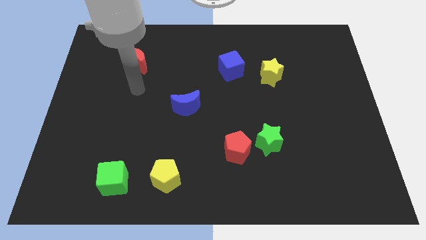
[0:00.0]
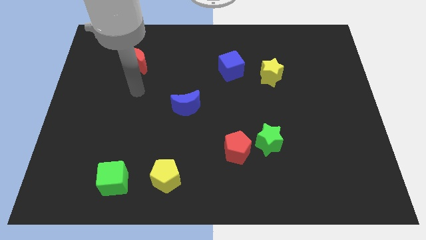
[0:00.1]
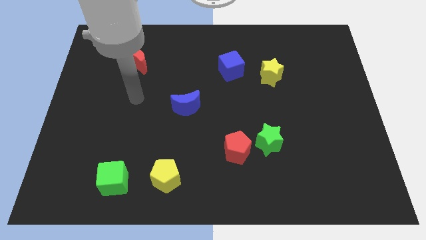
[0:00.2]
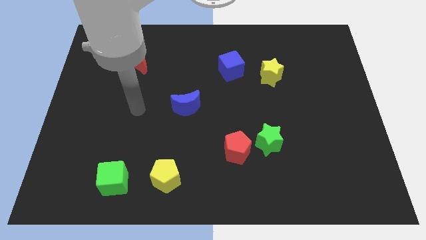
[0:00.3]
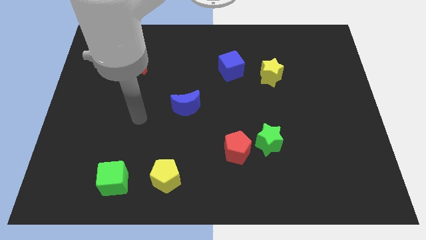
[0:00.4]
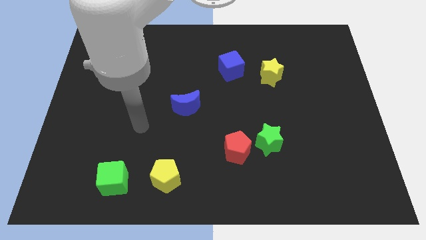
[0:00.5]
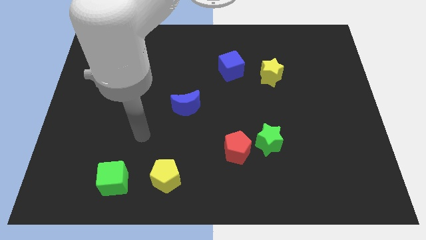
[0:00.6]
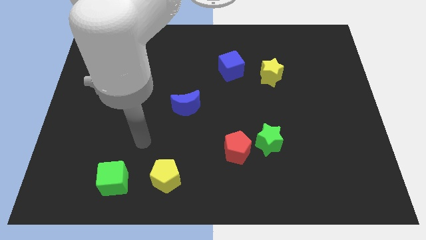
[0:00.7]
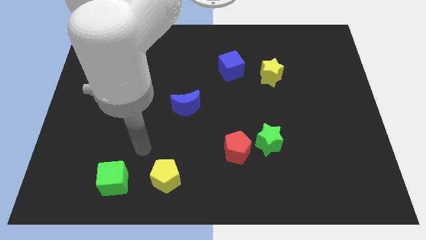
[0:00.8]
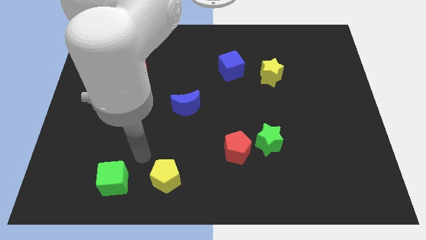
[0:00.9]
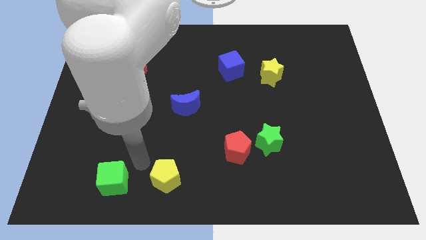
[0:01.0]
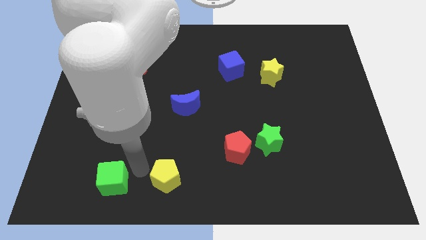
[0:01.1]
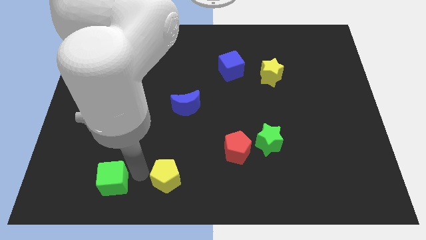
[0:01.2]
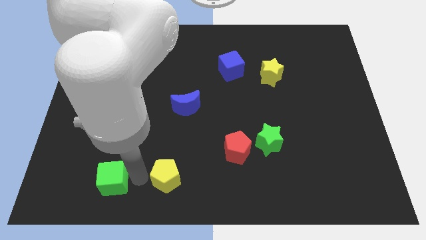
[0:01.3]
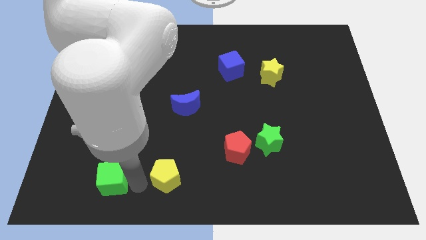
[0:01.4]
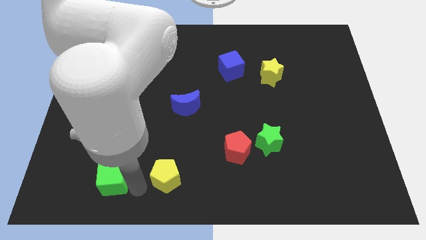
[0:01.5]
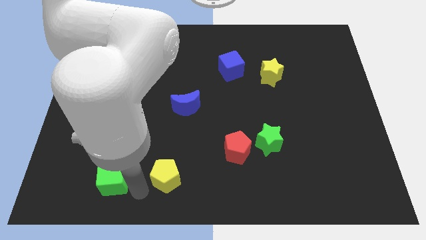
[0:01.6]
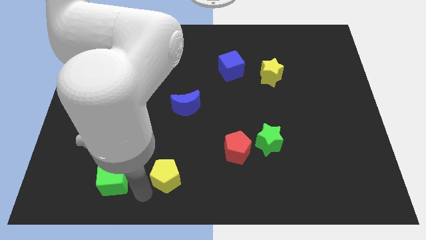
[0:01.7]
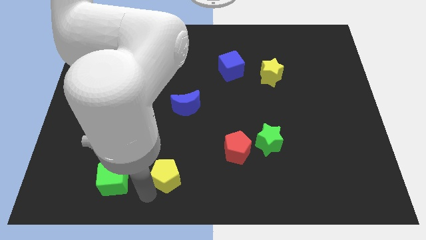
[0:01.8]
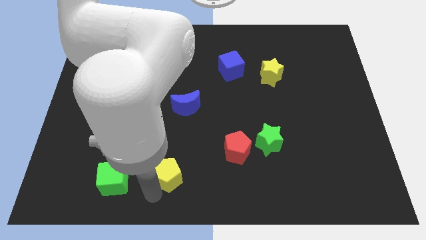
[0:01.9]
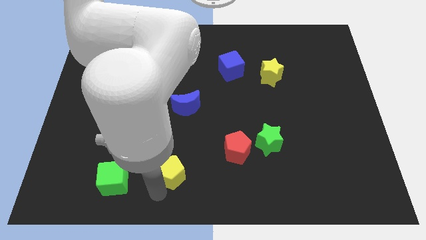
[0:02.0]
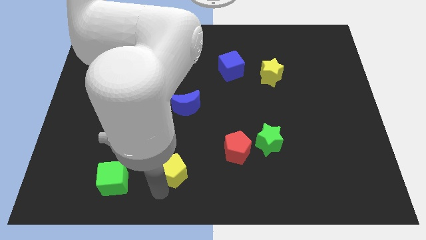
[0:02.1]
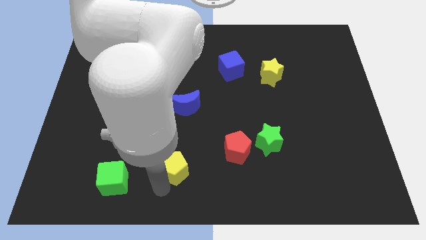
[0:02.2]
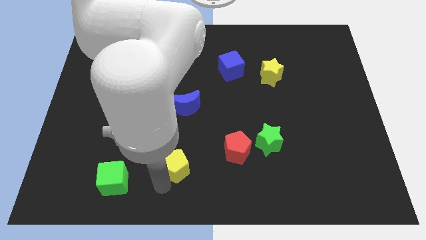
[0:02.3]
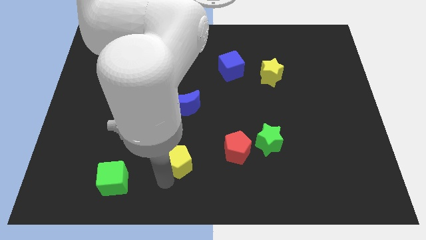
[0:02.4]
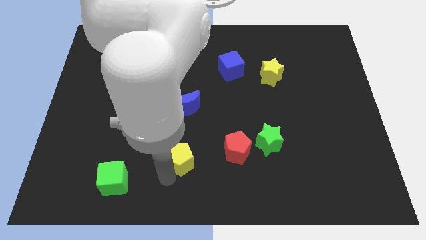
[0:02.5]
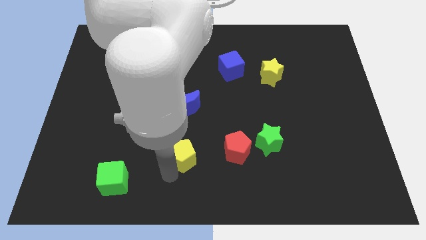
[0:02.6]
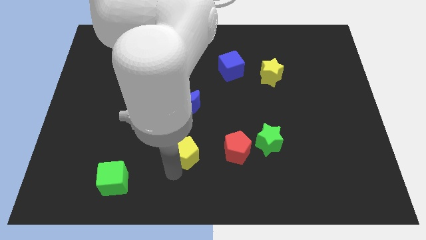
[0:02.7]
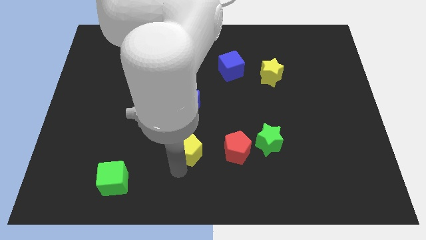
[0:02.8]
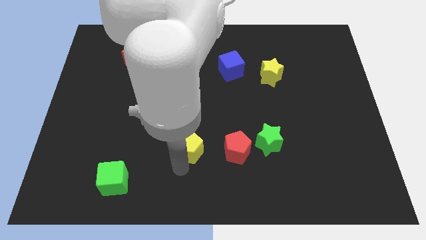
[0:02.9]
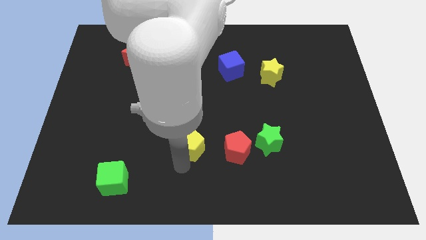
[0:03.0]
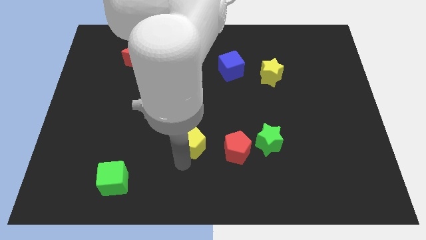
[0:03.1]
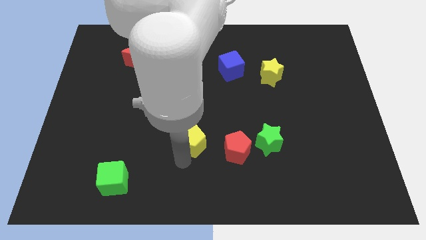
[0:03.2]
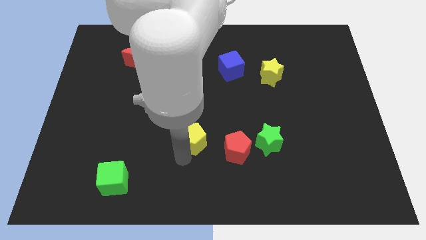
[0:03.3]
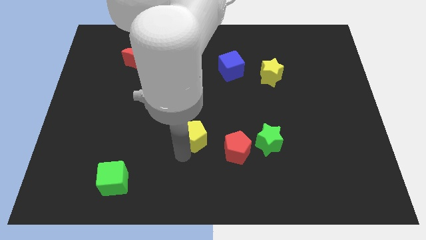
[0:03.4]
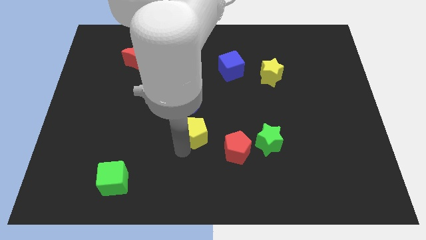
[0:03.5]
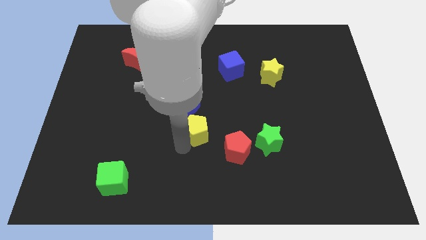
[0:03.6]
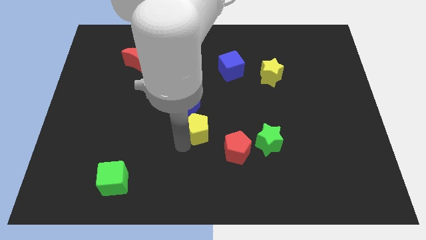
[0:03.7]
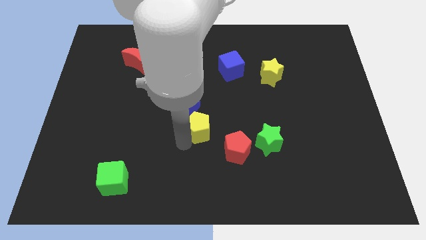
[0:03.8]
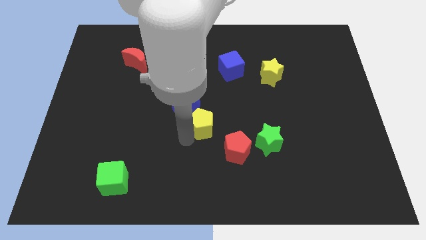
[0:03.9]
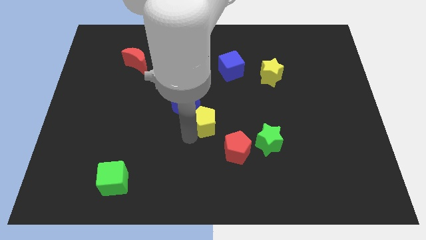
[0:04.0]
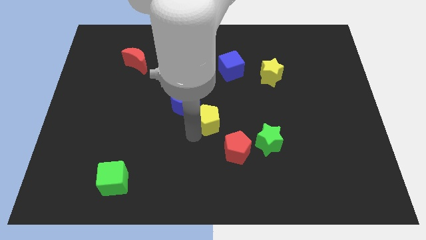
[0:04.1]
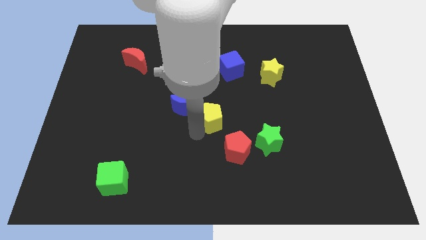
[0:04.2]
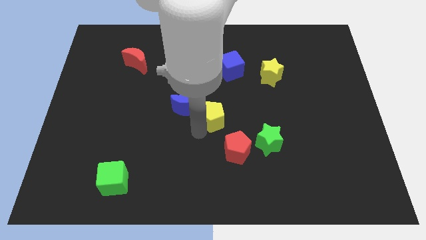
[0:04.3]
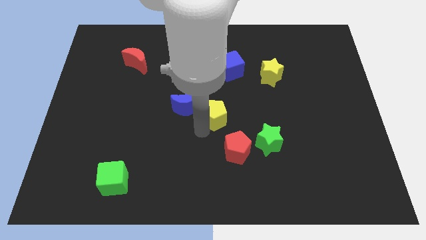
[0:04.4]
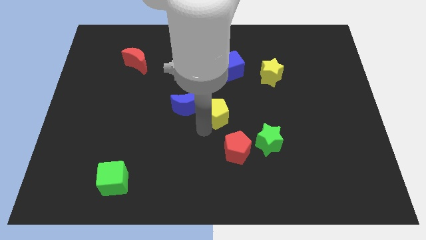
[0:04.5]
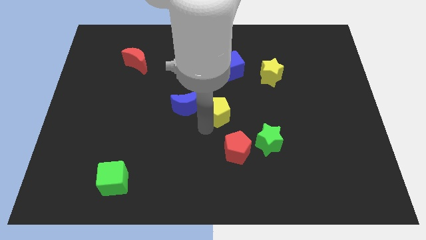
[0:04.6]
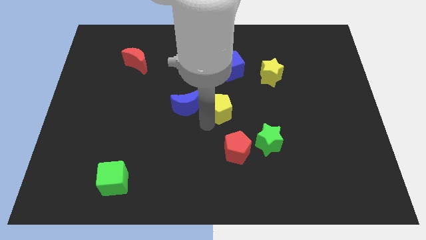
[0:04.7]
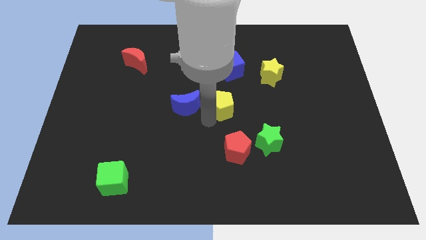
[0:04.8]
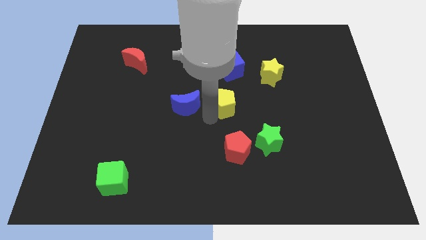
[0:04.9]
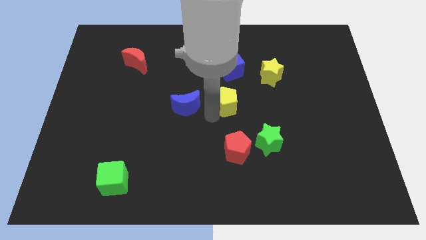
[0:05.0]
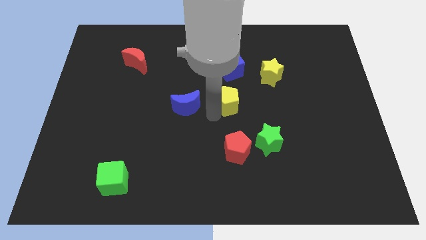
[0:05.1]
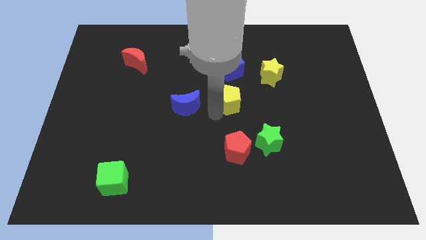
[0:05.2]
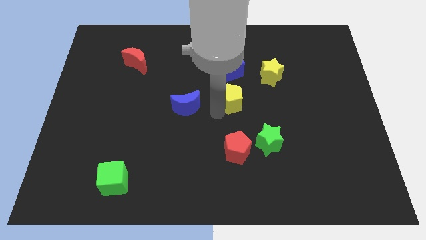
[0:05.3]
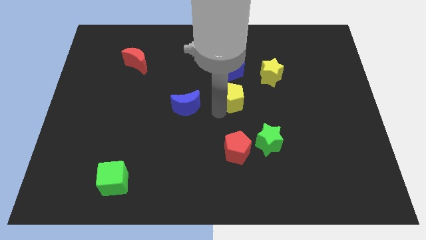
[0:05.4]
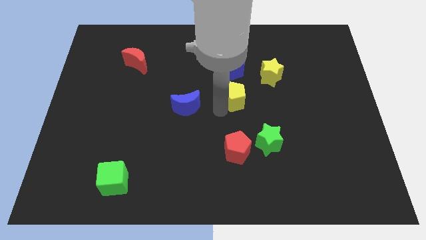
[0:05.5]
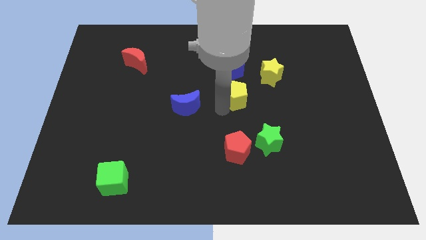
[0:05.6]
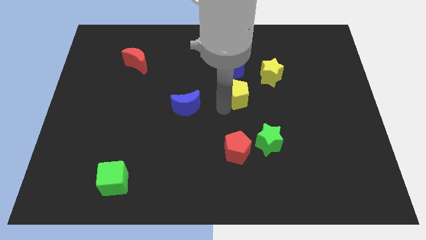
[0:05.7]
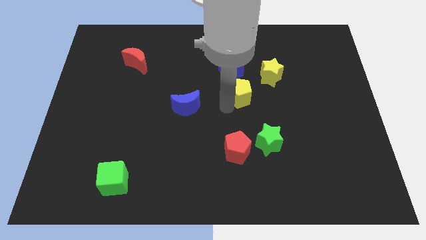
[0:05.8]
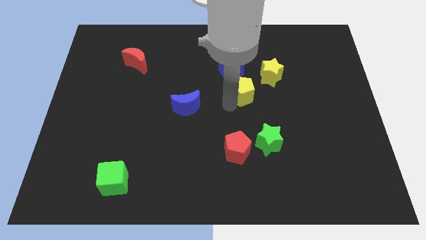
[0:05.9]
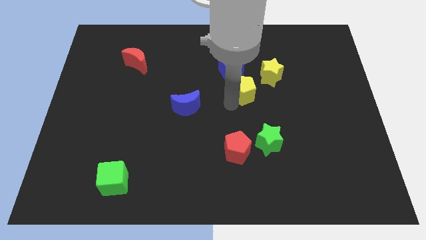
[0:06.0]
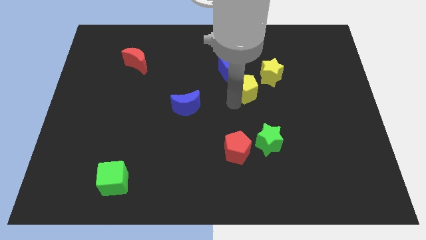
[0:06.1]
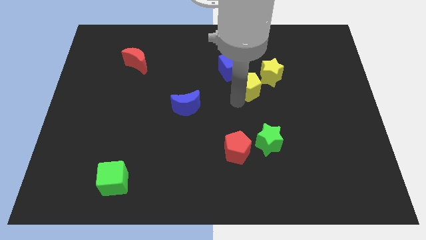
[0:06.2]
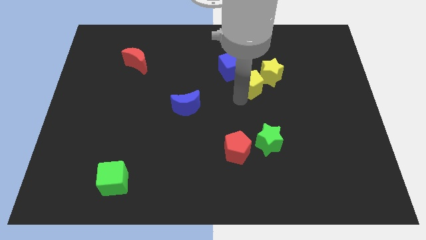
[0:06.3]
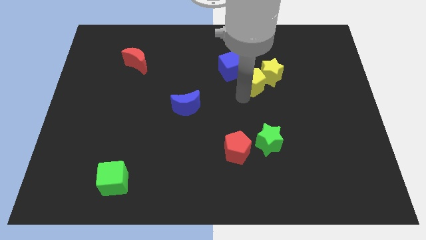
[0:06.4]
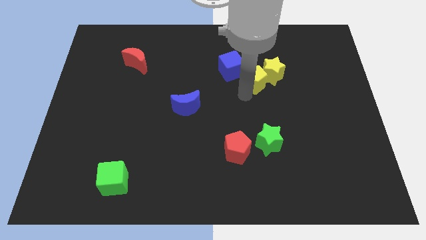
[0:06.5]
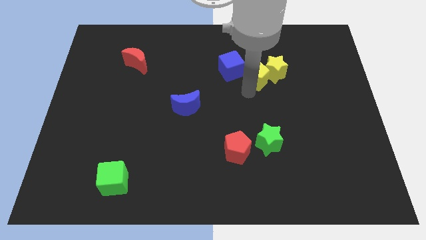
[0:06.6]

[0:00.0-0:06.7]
put the yellow pentagon close to the yellow star

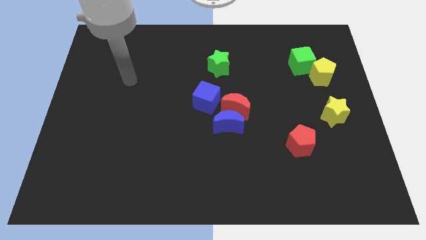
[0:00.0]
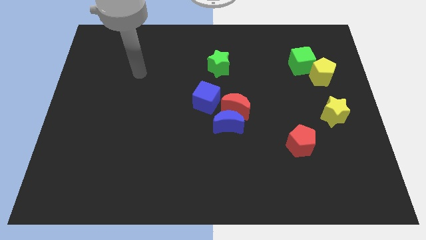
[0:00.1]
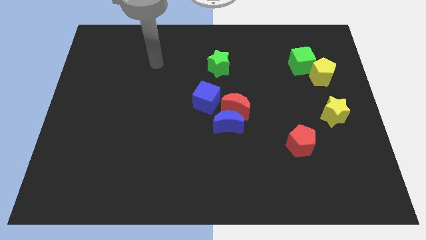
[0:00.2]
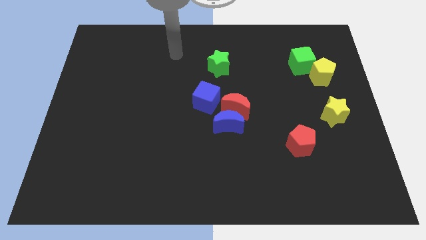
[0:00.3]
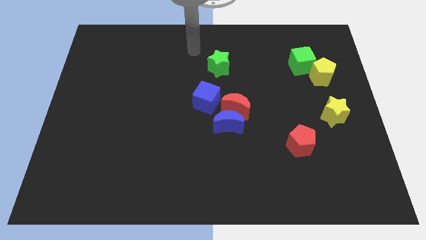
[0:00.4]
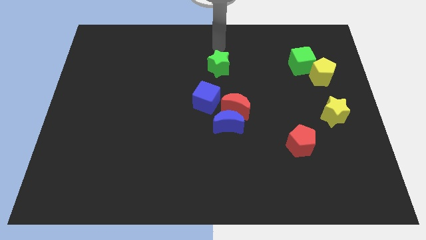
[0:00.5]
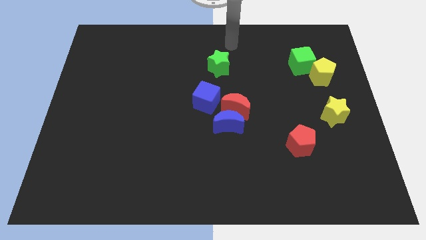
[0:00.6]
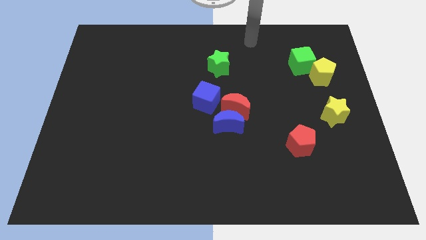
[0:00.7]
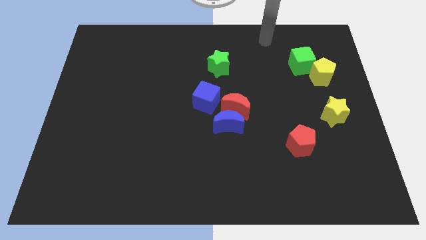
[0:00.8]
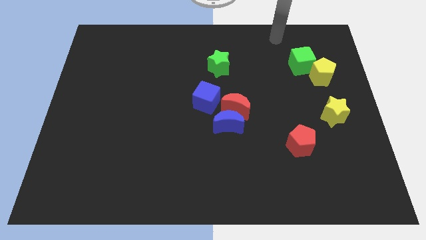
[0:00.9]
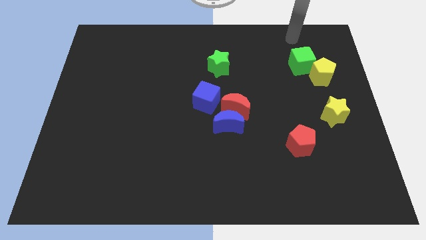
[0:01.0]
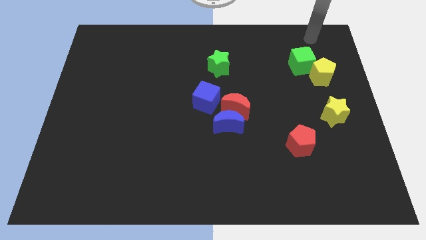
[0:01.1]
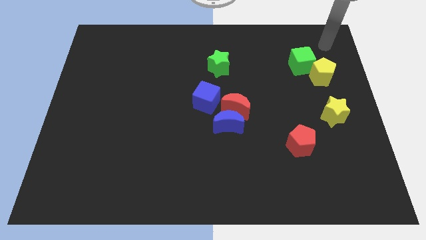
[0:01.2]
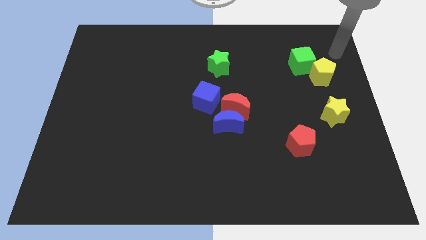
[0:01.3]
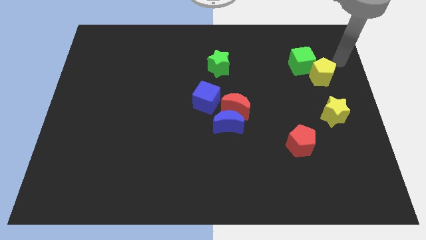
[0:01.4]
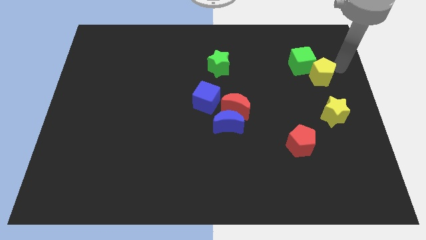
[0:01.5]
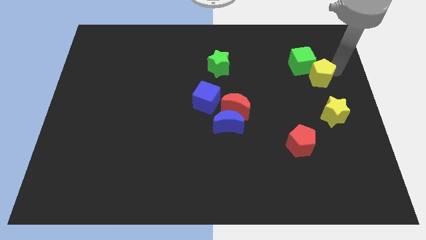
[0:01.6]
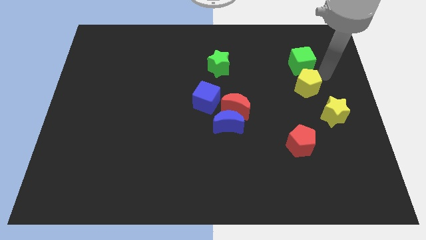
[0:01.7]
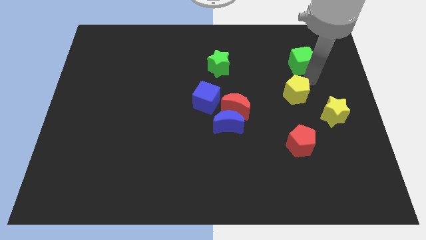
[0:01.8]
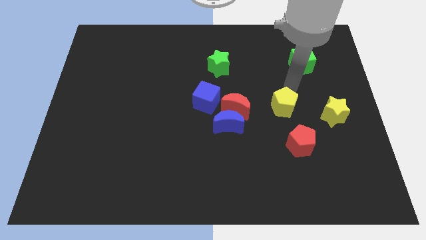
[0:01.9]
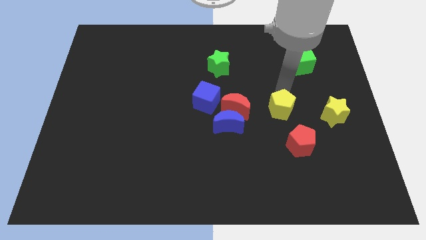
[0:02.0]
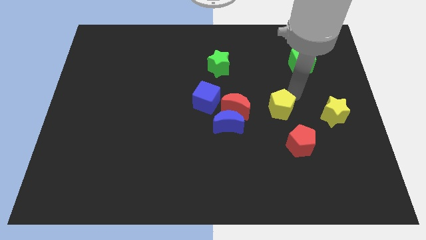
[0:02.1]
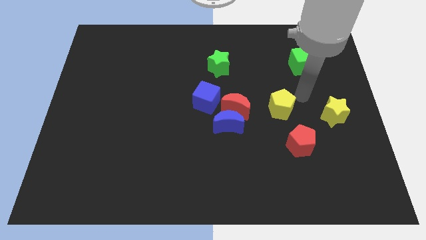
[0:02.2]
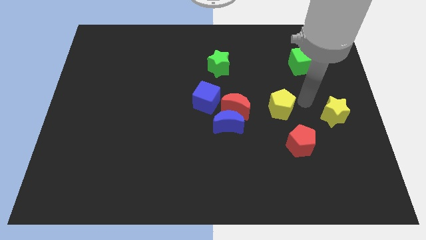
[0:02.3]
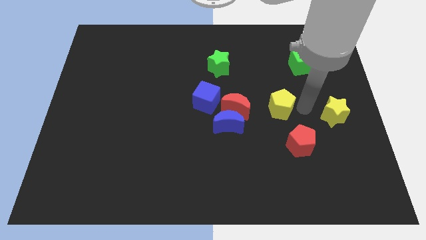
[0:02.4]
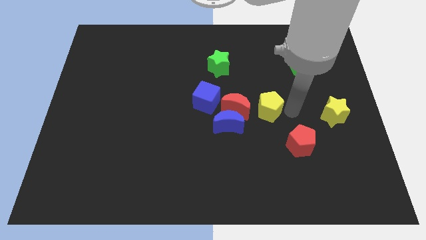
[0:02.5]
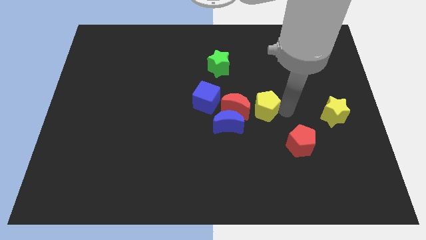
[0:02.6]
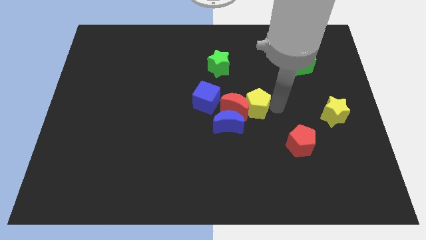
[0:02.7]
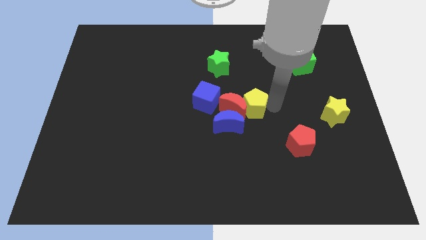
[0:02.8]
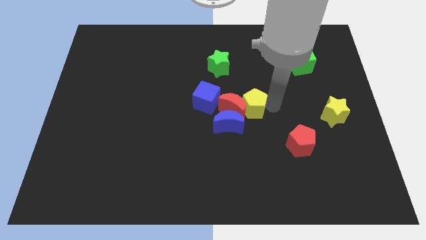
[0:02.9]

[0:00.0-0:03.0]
move the yellow pentagon towards the red moon
